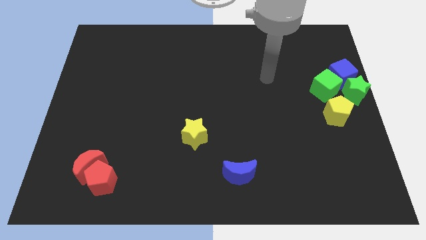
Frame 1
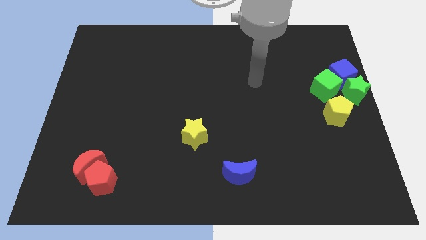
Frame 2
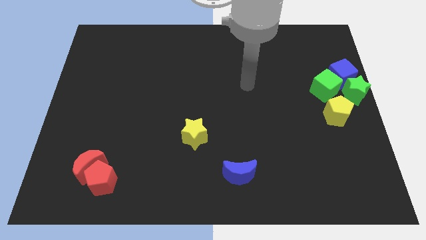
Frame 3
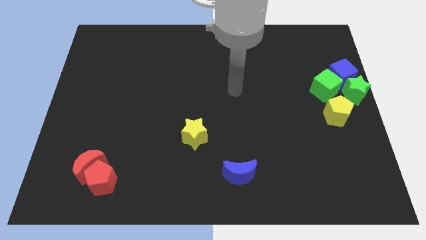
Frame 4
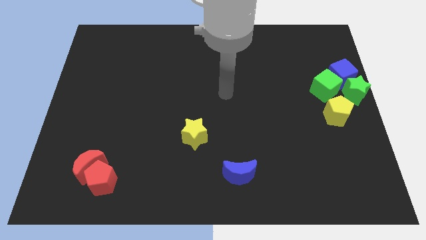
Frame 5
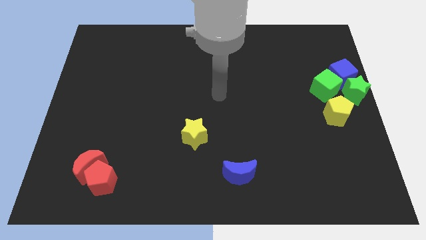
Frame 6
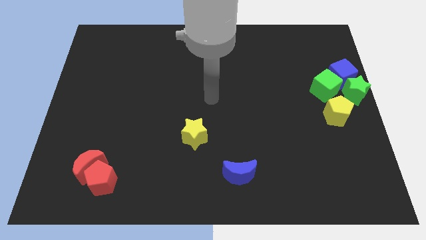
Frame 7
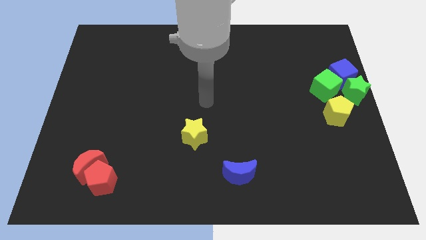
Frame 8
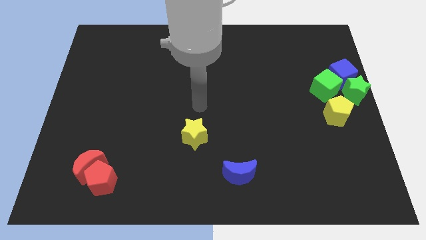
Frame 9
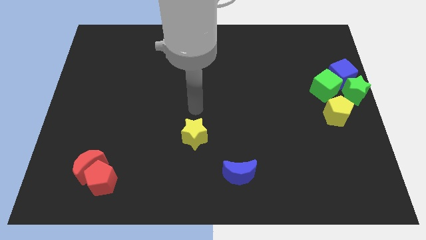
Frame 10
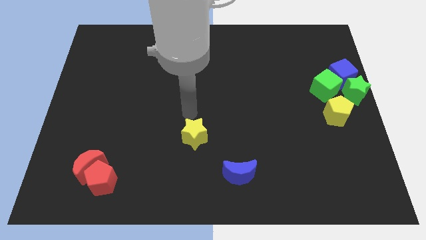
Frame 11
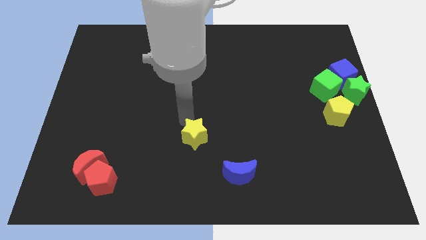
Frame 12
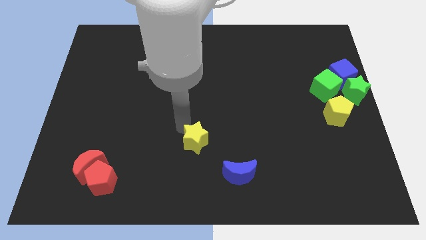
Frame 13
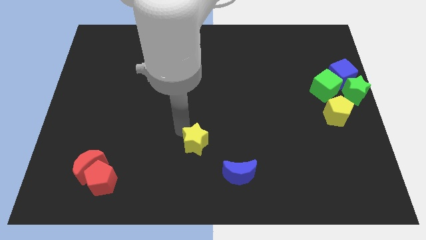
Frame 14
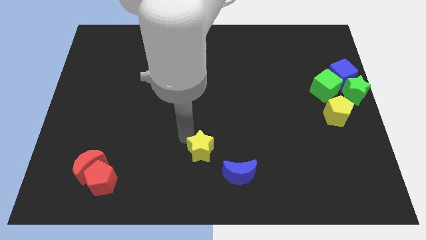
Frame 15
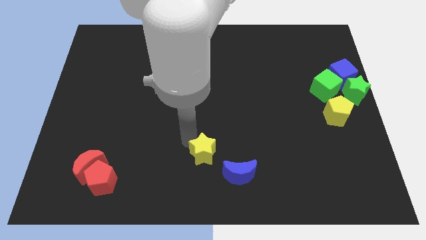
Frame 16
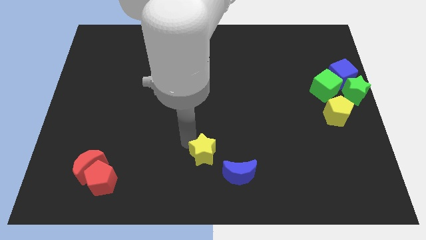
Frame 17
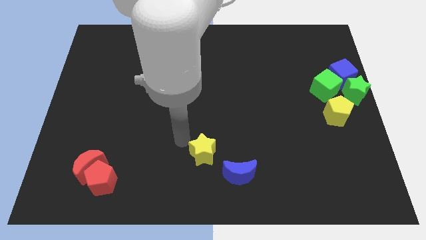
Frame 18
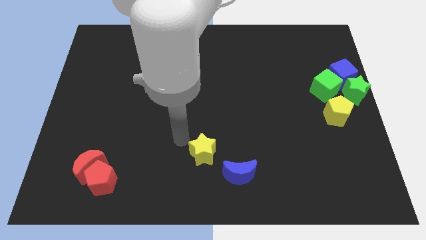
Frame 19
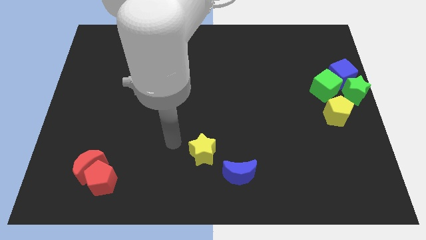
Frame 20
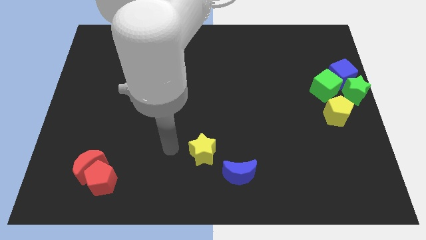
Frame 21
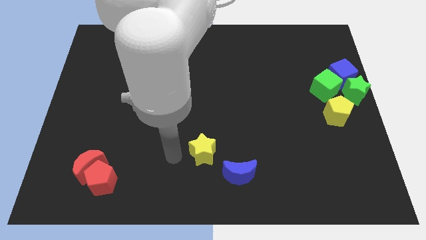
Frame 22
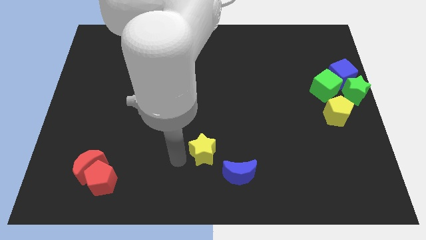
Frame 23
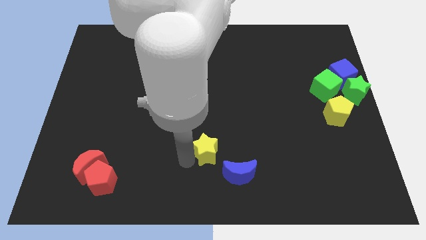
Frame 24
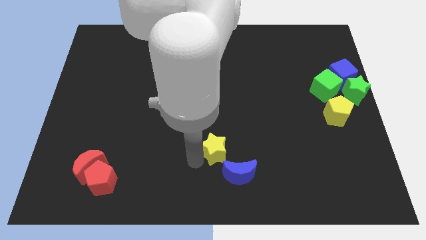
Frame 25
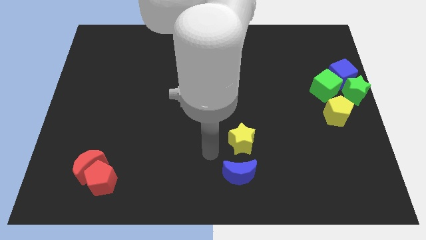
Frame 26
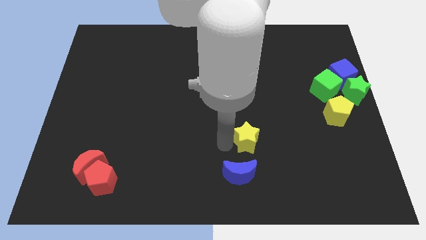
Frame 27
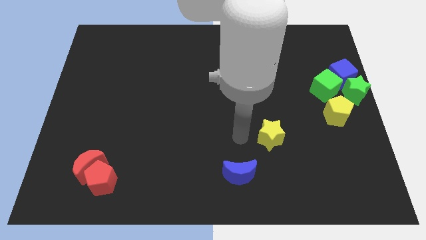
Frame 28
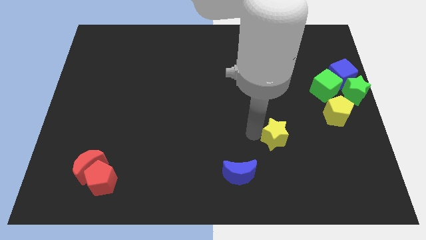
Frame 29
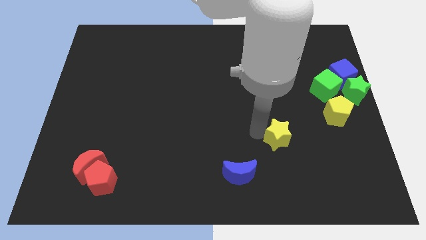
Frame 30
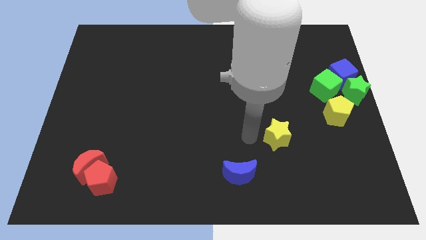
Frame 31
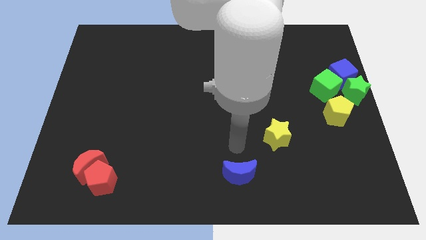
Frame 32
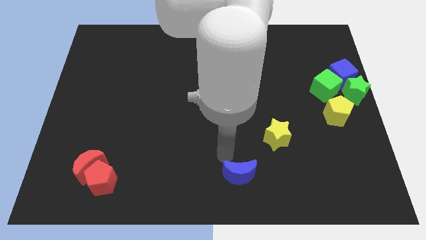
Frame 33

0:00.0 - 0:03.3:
slightly drag the yellow star right side of the board

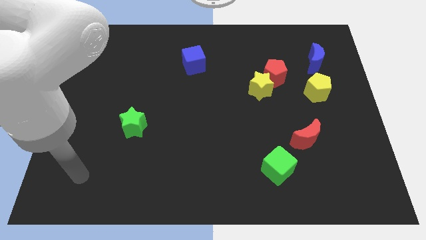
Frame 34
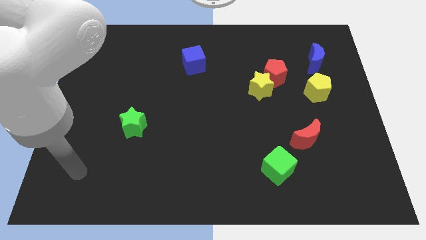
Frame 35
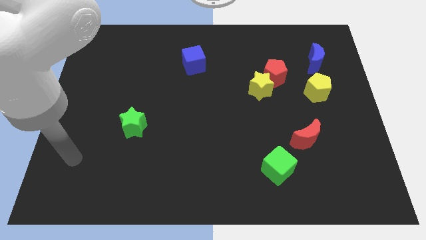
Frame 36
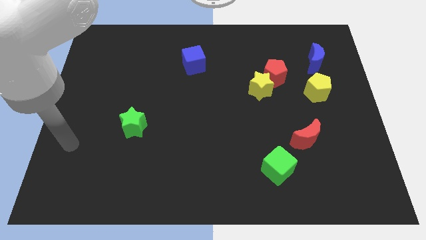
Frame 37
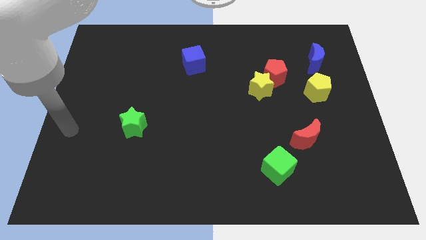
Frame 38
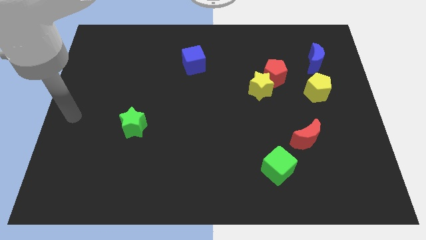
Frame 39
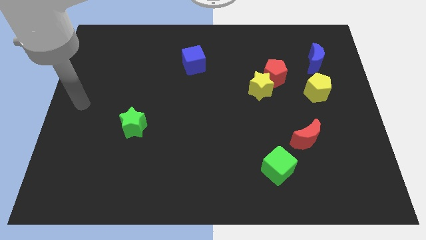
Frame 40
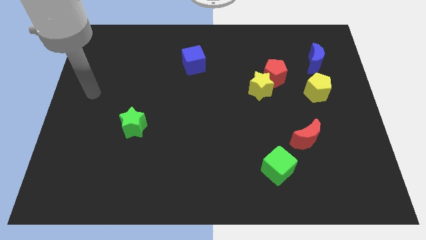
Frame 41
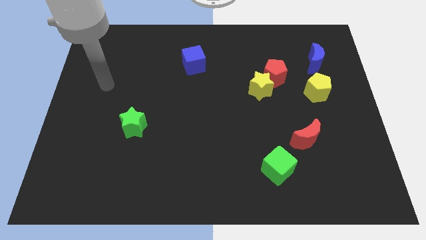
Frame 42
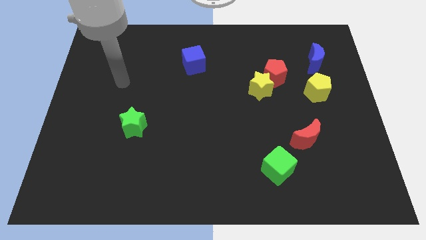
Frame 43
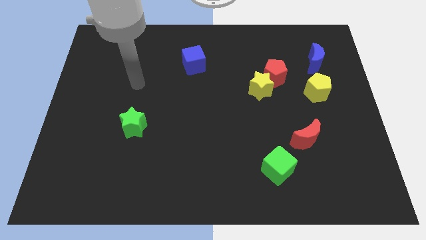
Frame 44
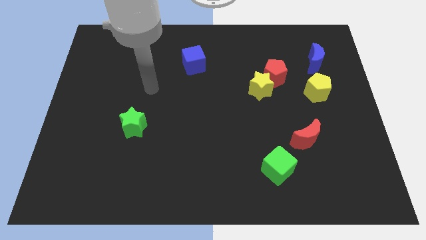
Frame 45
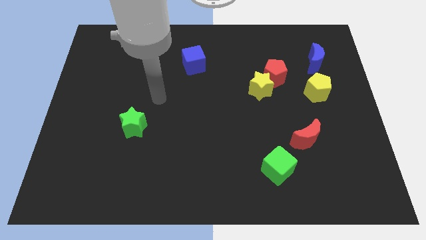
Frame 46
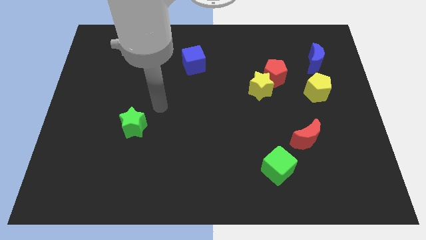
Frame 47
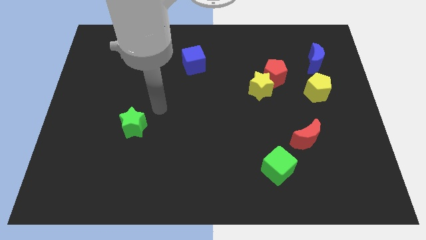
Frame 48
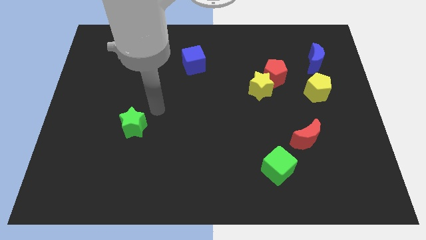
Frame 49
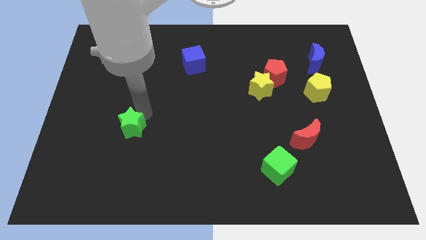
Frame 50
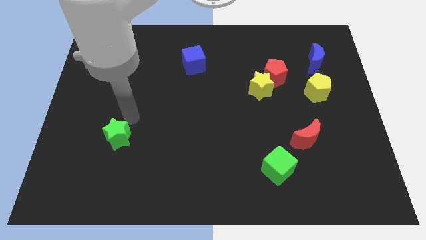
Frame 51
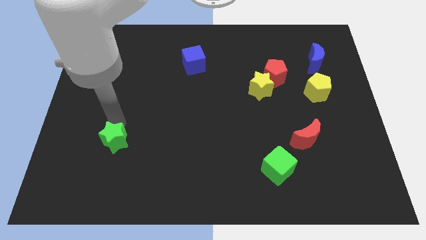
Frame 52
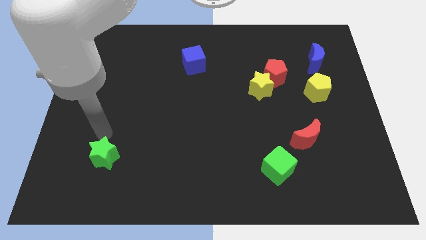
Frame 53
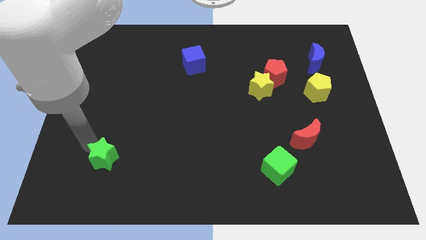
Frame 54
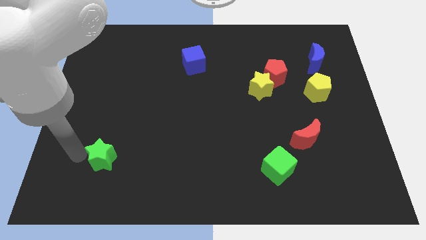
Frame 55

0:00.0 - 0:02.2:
push the green star towards the bottom left

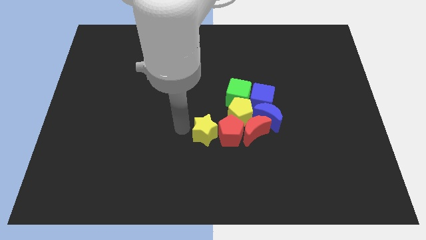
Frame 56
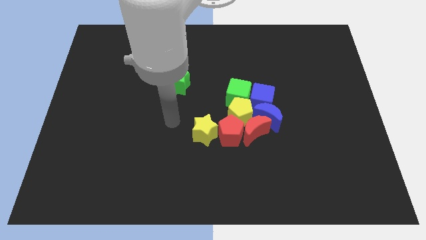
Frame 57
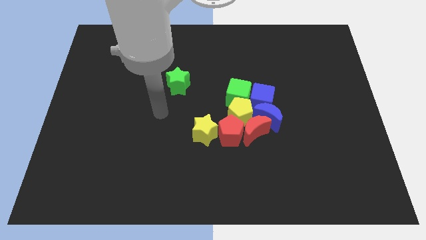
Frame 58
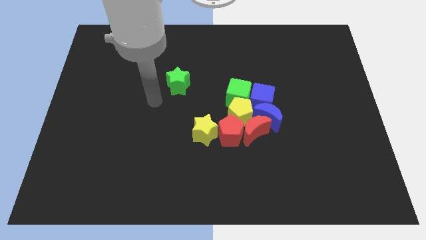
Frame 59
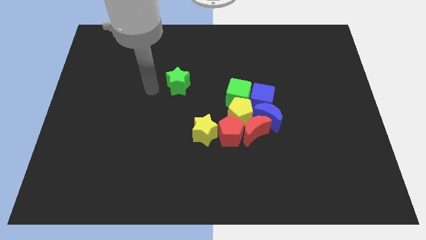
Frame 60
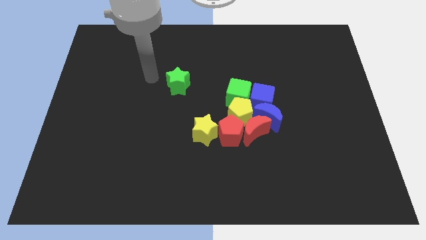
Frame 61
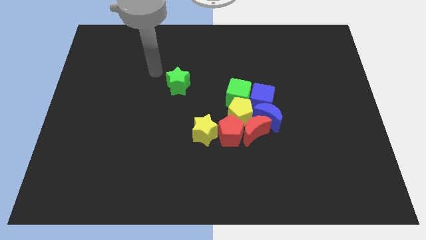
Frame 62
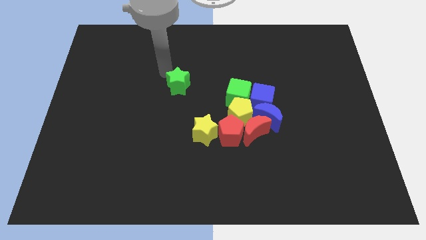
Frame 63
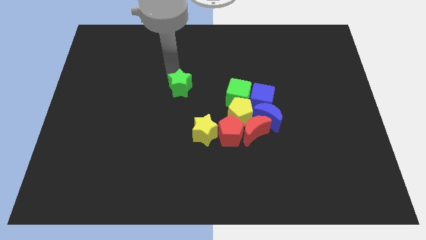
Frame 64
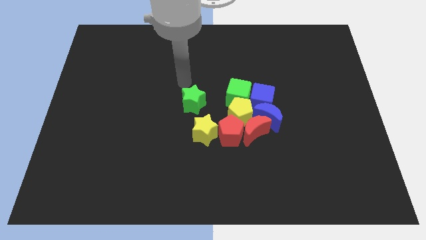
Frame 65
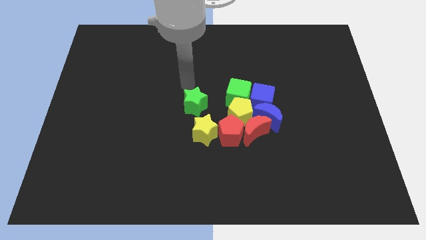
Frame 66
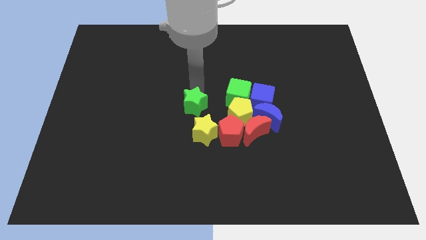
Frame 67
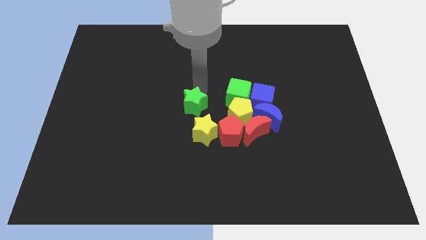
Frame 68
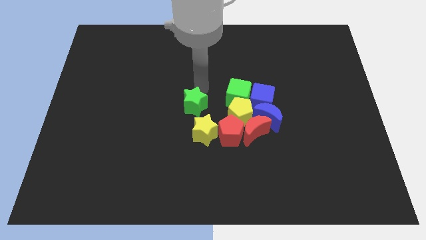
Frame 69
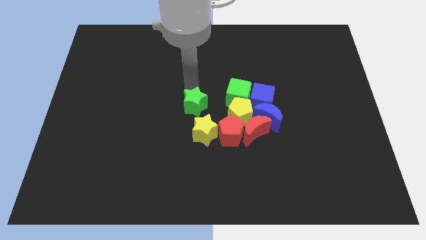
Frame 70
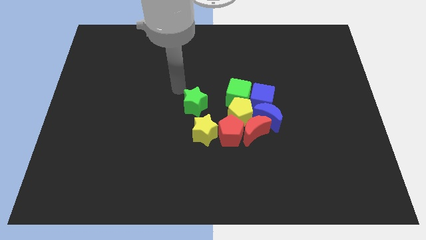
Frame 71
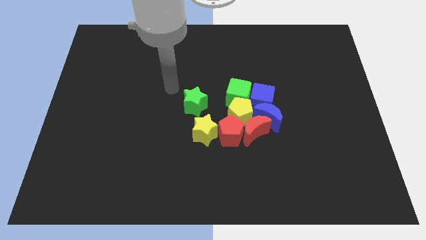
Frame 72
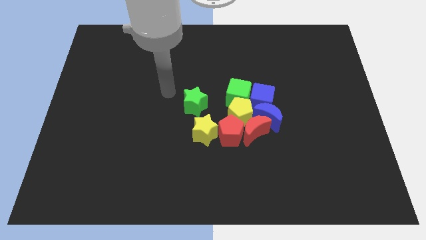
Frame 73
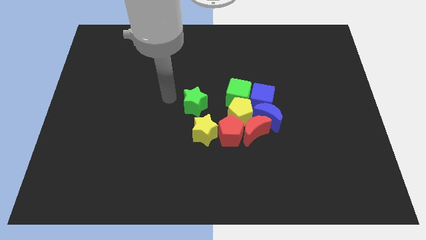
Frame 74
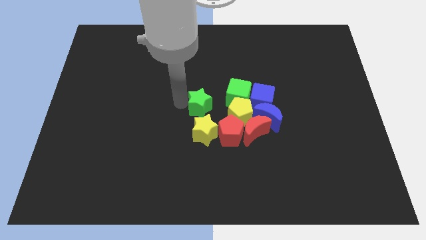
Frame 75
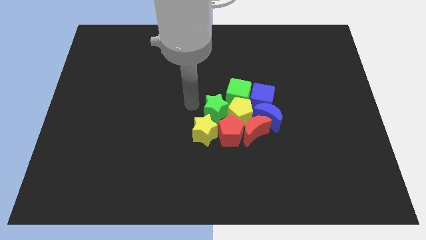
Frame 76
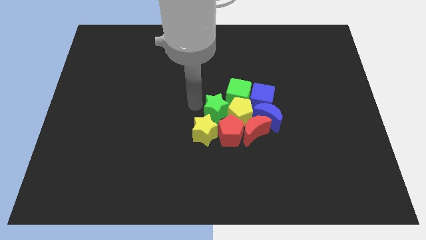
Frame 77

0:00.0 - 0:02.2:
place the green star to the left of yellow pentagon

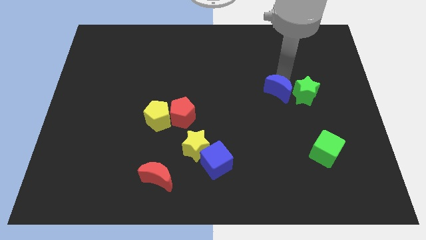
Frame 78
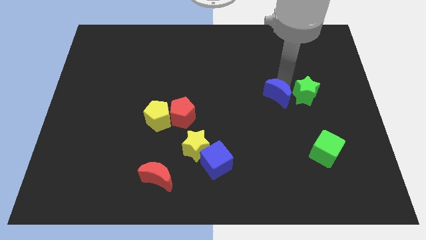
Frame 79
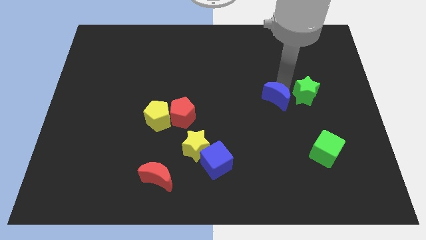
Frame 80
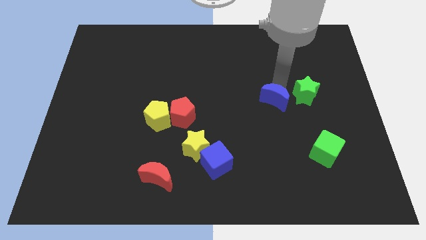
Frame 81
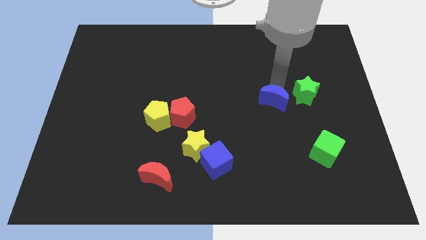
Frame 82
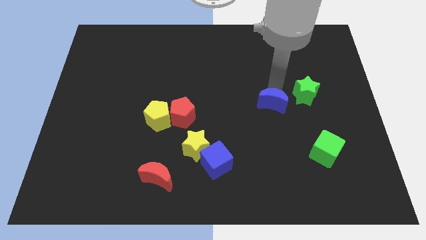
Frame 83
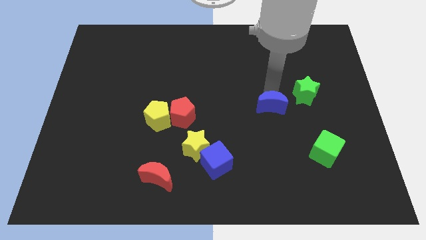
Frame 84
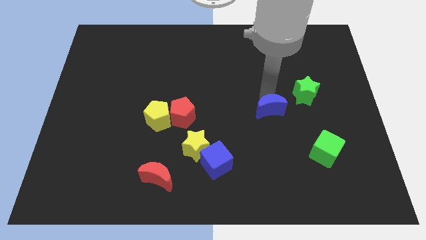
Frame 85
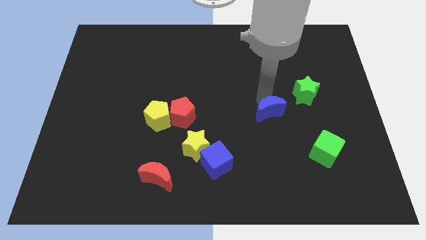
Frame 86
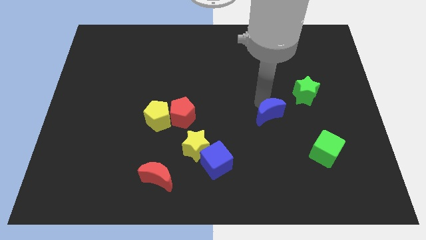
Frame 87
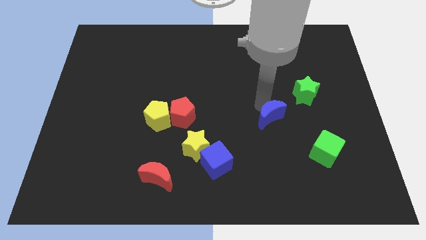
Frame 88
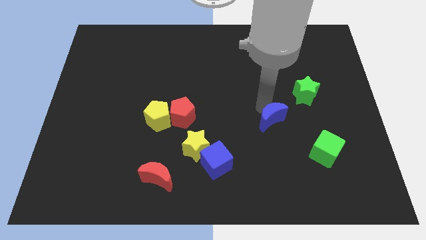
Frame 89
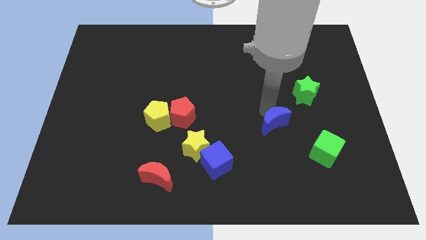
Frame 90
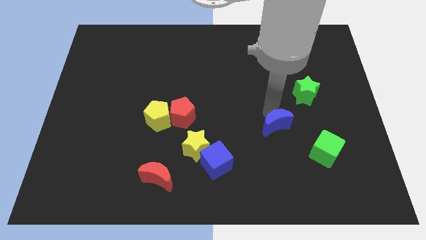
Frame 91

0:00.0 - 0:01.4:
push the blue crescent to the bottom left of the green star
